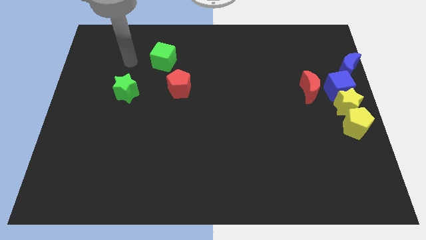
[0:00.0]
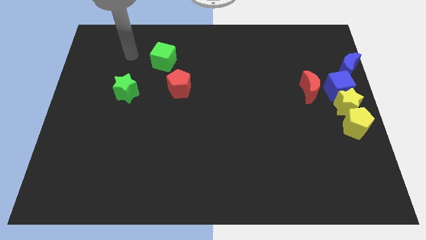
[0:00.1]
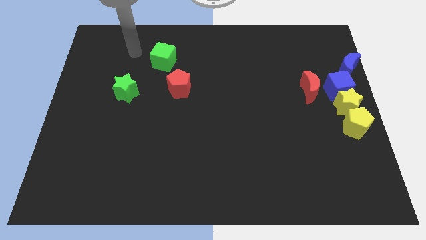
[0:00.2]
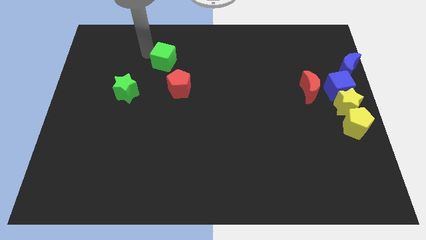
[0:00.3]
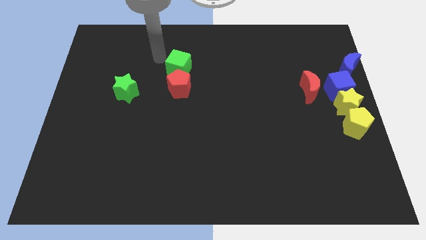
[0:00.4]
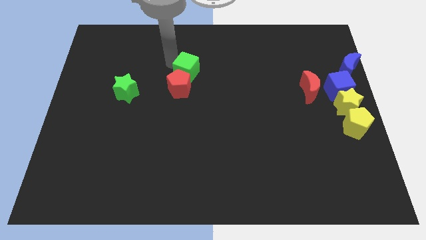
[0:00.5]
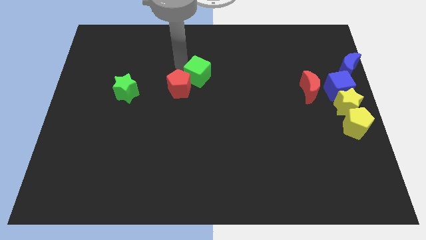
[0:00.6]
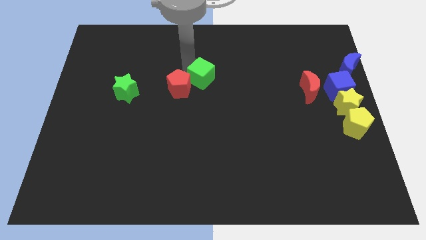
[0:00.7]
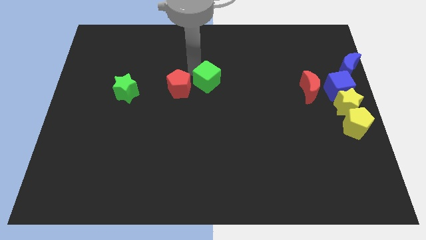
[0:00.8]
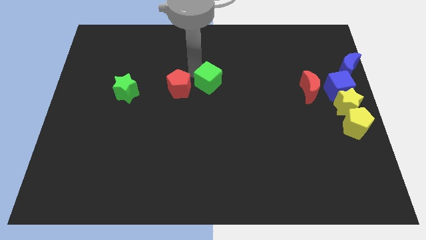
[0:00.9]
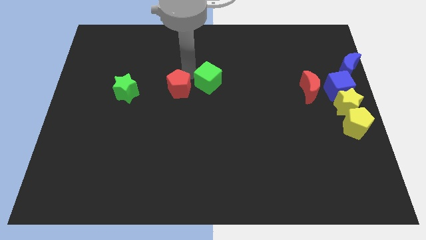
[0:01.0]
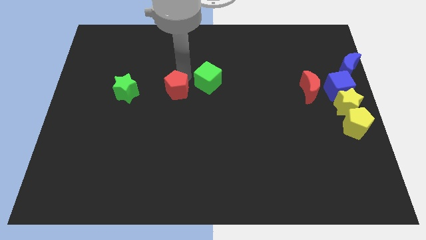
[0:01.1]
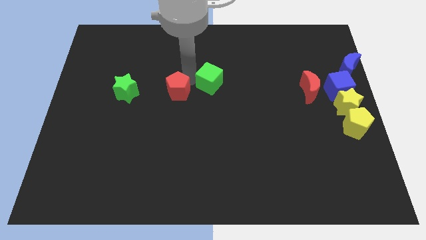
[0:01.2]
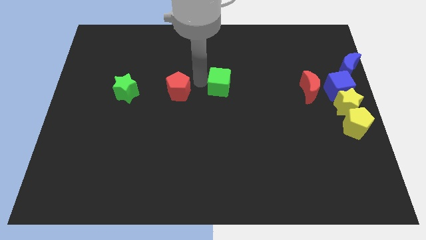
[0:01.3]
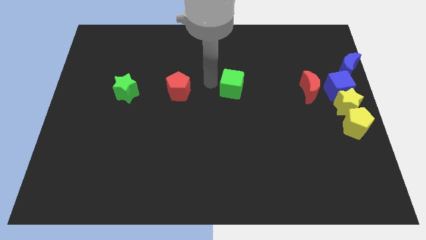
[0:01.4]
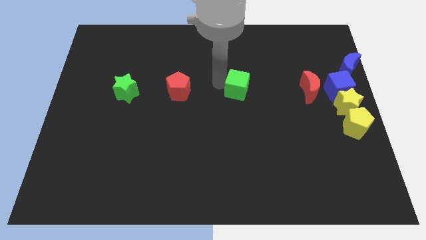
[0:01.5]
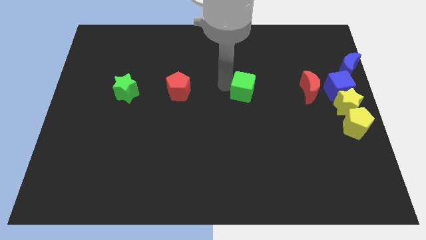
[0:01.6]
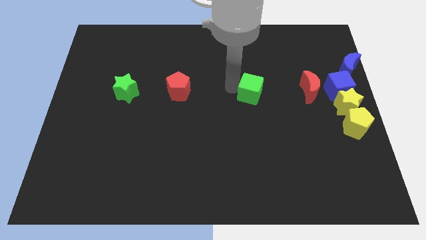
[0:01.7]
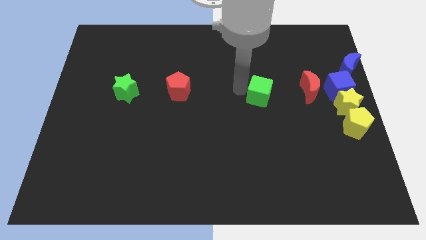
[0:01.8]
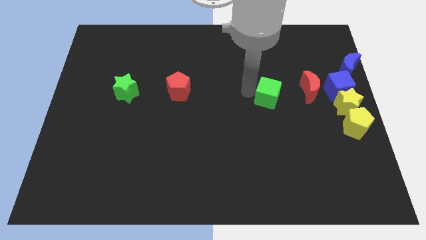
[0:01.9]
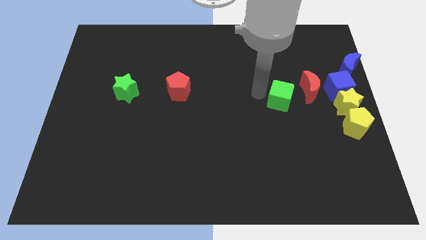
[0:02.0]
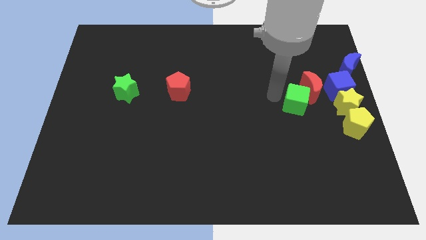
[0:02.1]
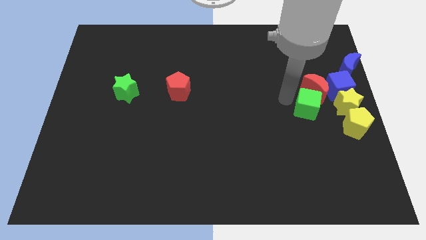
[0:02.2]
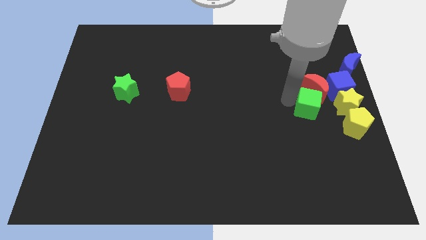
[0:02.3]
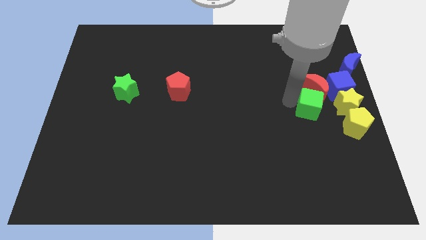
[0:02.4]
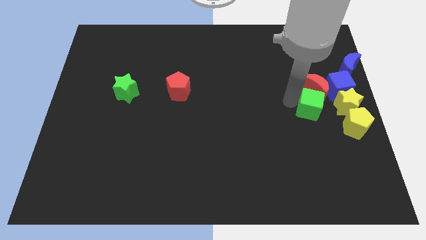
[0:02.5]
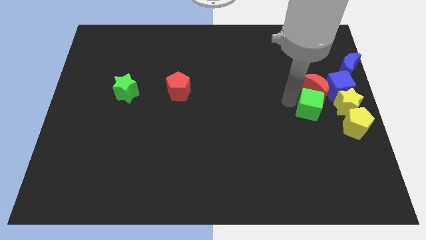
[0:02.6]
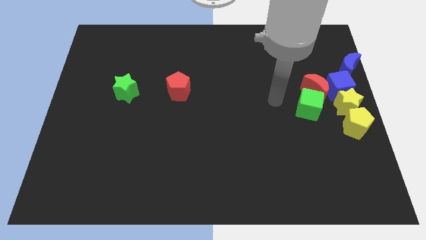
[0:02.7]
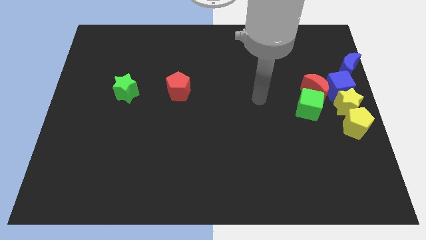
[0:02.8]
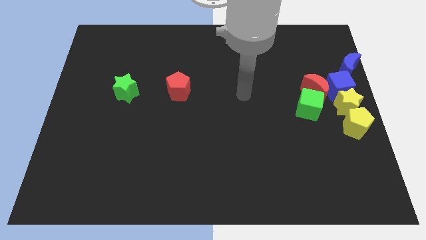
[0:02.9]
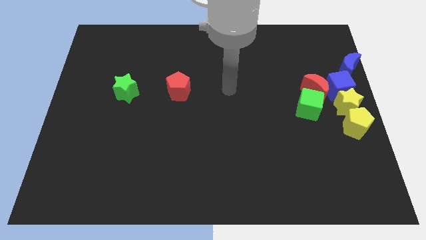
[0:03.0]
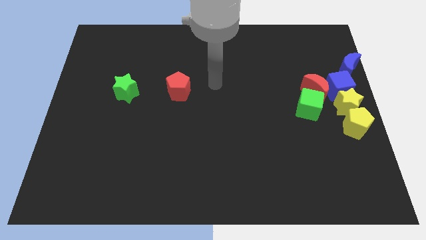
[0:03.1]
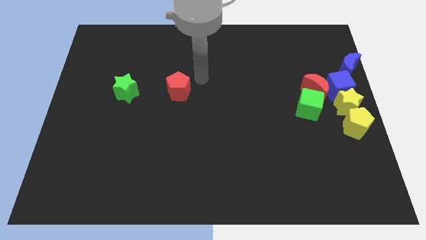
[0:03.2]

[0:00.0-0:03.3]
put the green cube below the red crescent

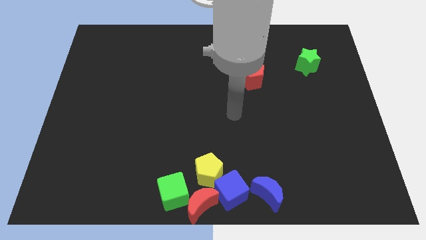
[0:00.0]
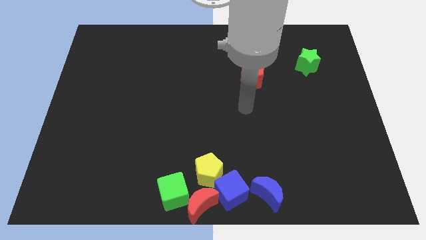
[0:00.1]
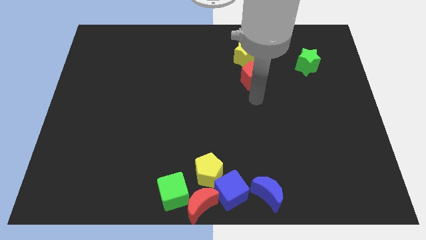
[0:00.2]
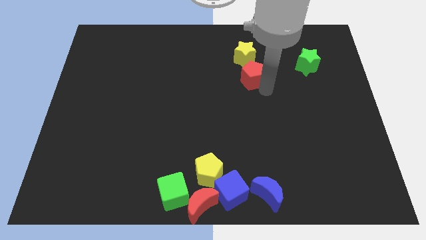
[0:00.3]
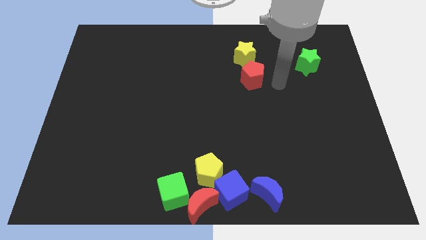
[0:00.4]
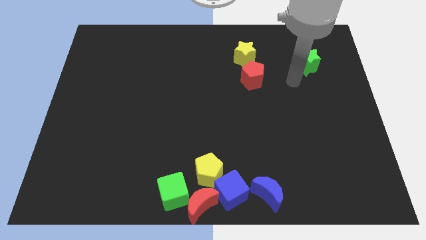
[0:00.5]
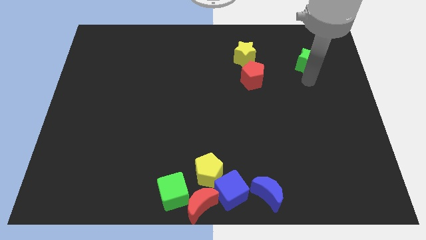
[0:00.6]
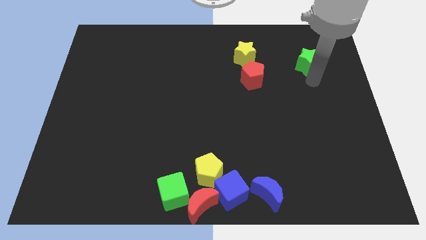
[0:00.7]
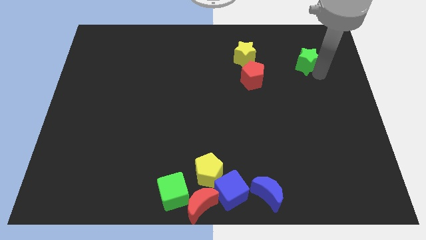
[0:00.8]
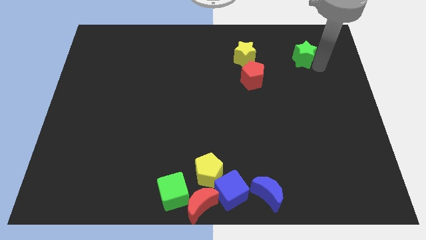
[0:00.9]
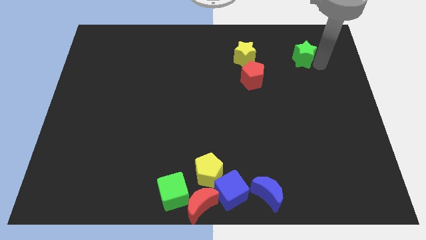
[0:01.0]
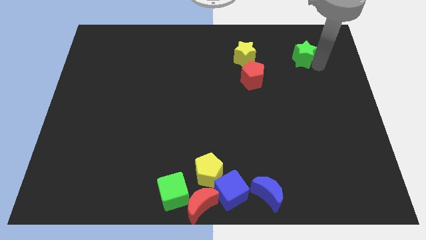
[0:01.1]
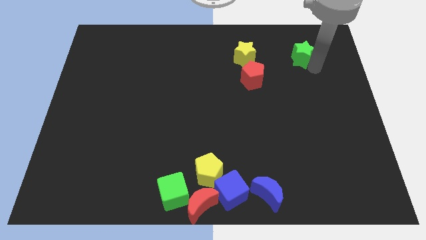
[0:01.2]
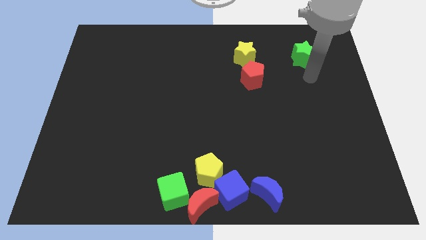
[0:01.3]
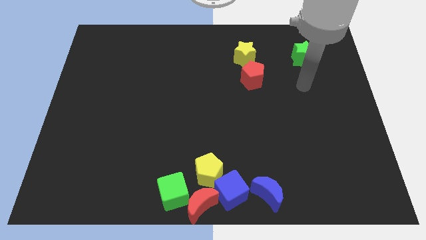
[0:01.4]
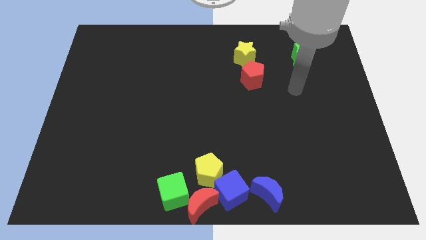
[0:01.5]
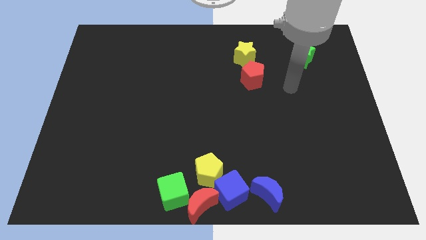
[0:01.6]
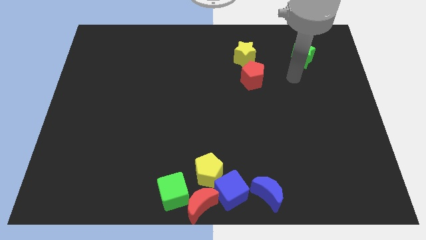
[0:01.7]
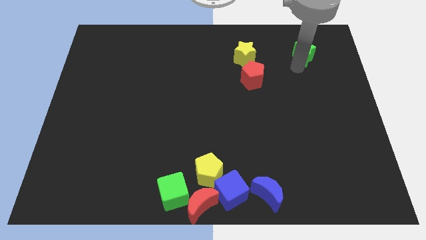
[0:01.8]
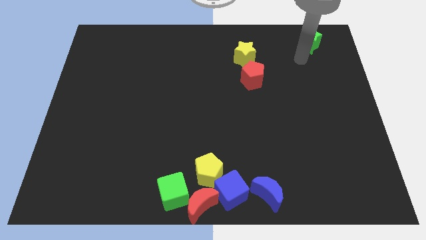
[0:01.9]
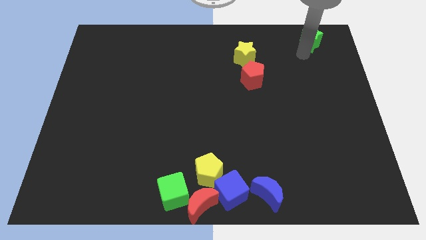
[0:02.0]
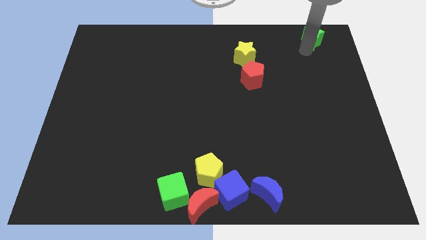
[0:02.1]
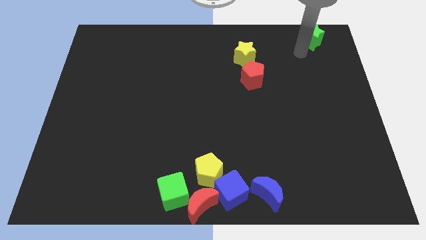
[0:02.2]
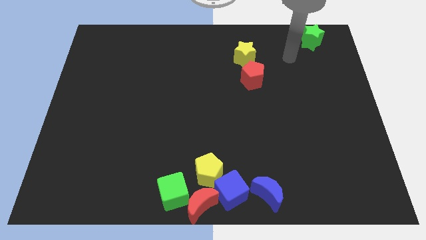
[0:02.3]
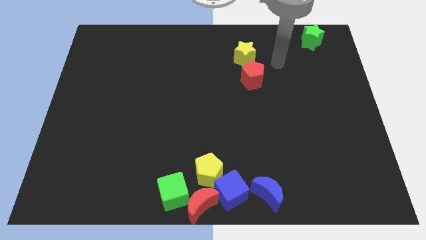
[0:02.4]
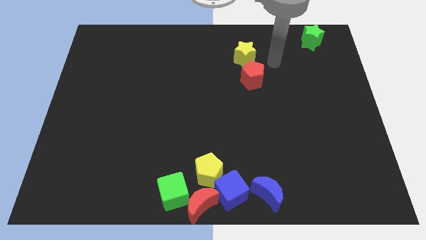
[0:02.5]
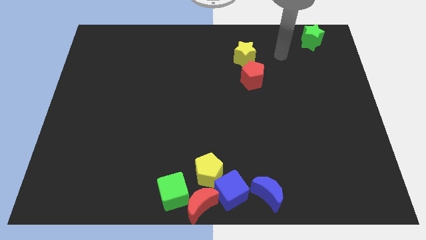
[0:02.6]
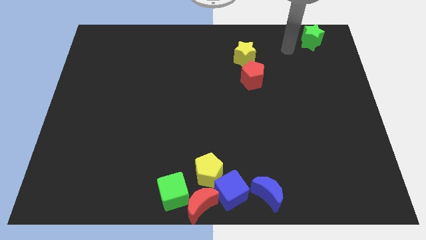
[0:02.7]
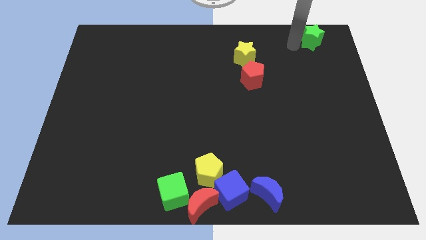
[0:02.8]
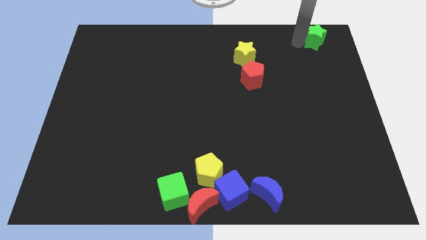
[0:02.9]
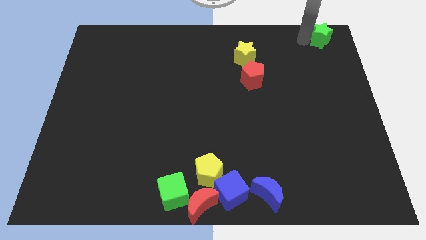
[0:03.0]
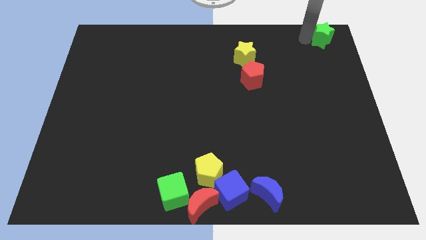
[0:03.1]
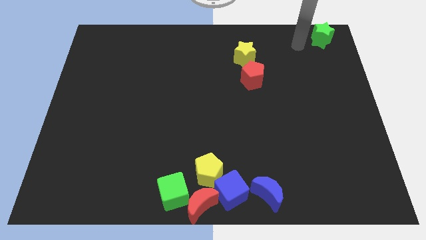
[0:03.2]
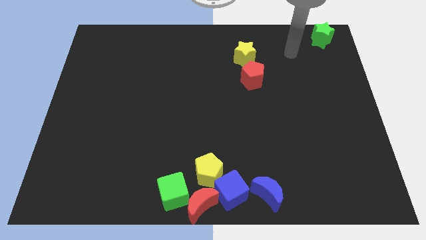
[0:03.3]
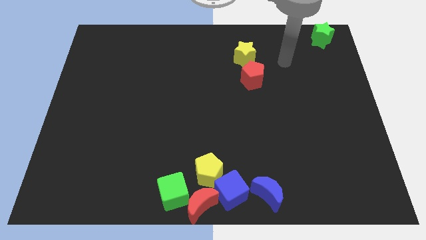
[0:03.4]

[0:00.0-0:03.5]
move the green star at the top right corner

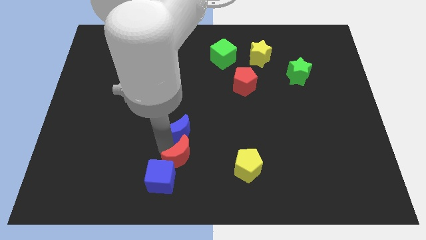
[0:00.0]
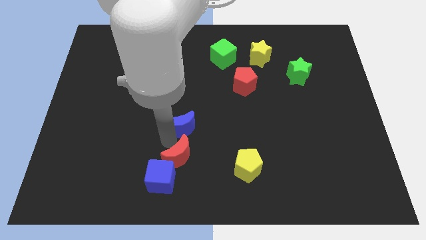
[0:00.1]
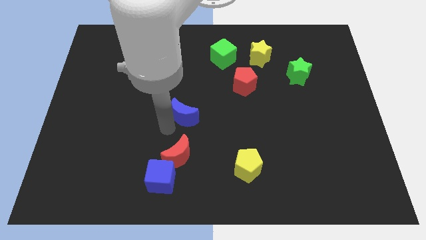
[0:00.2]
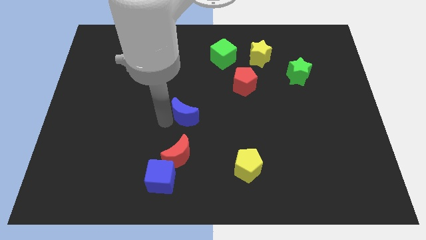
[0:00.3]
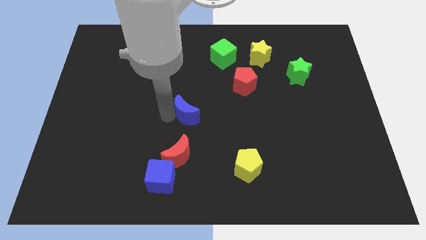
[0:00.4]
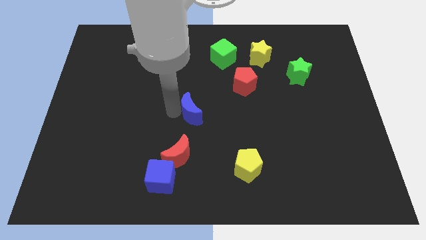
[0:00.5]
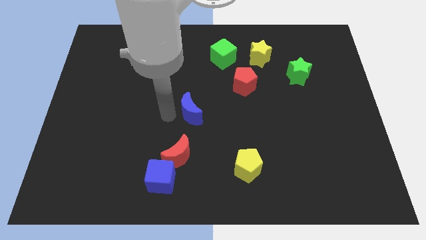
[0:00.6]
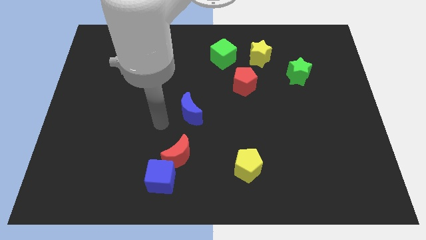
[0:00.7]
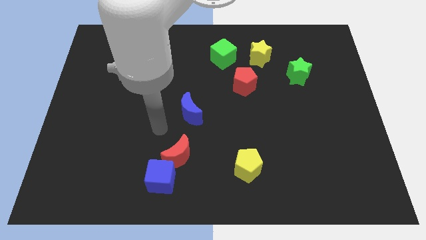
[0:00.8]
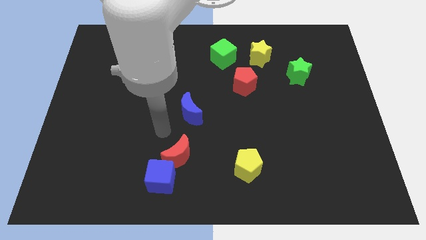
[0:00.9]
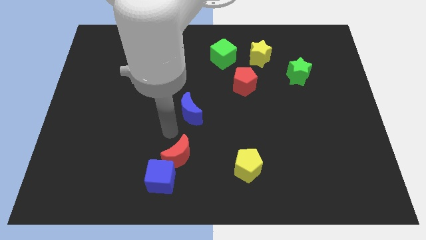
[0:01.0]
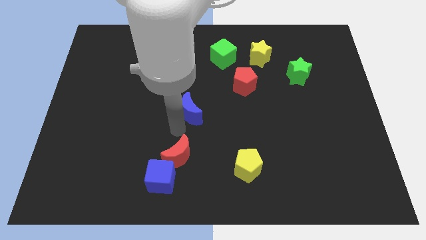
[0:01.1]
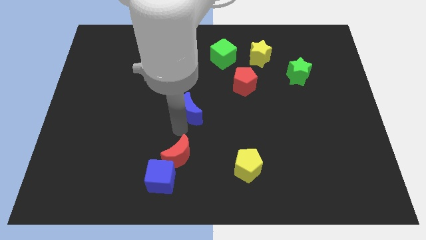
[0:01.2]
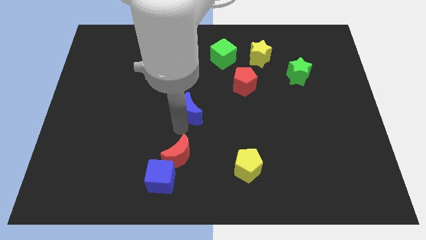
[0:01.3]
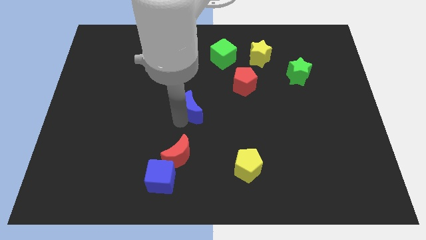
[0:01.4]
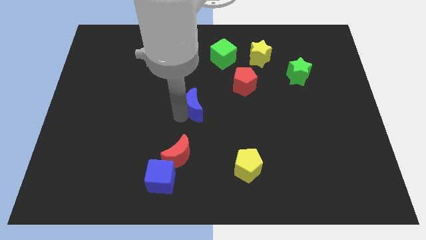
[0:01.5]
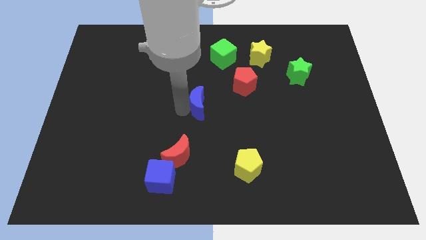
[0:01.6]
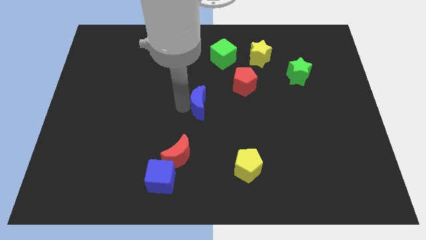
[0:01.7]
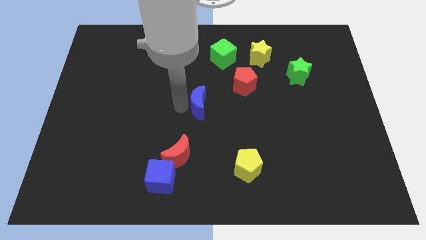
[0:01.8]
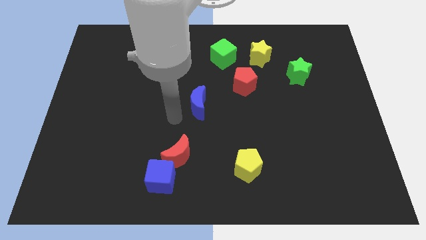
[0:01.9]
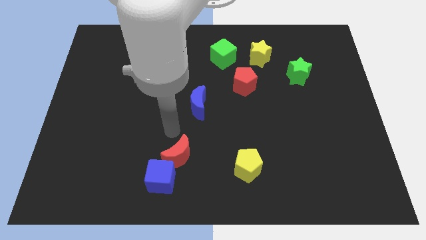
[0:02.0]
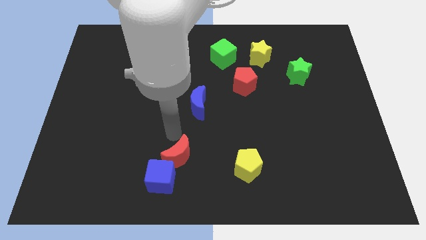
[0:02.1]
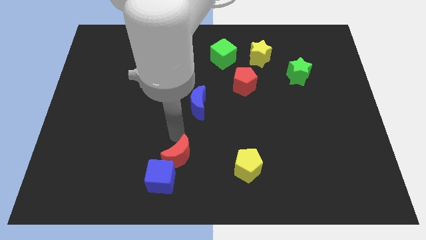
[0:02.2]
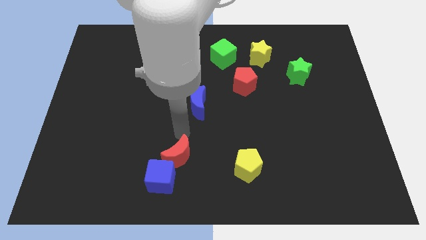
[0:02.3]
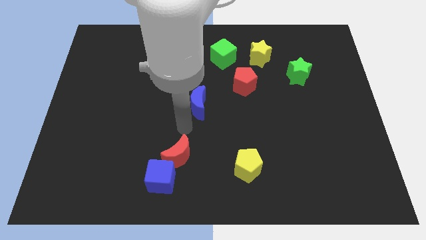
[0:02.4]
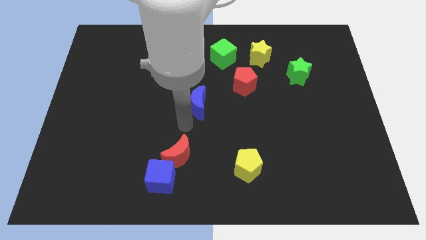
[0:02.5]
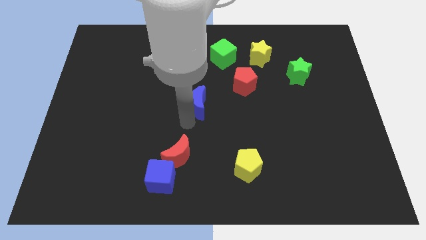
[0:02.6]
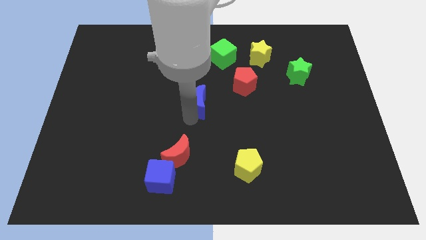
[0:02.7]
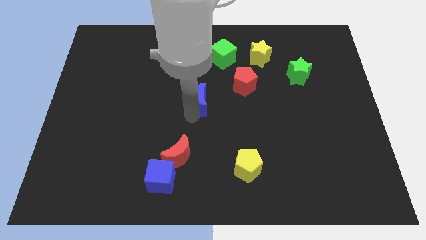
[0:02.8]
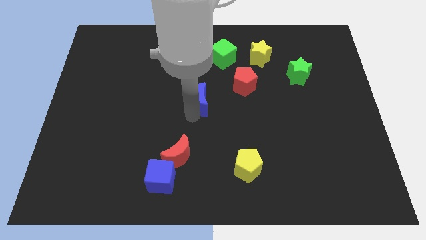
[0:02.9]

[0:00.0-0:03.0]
slightly push the blue moon to the top of the board
